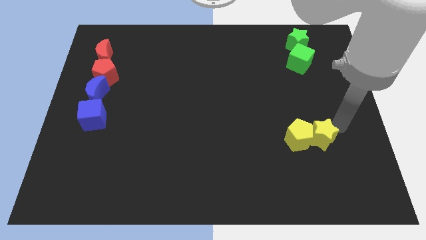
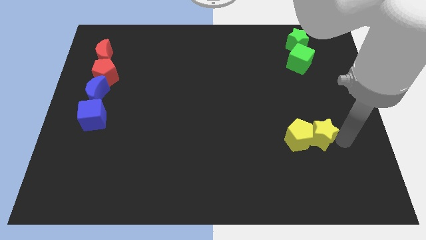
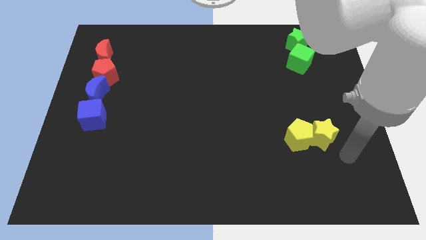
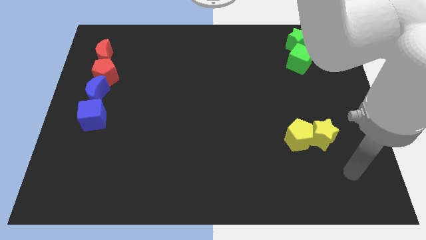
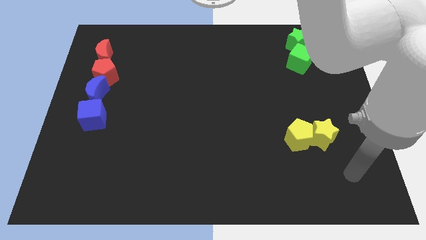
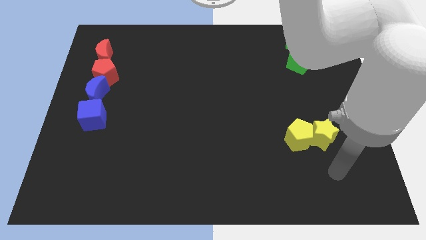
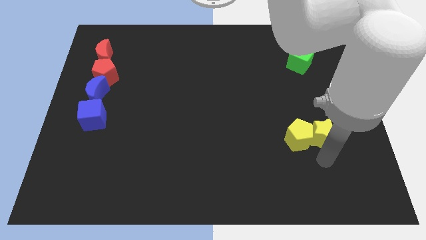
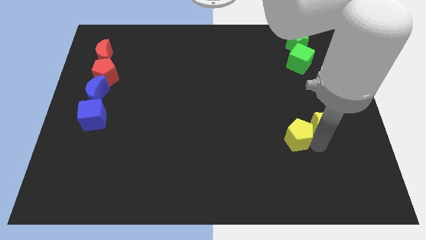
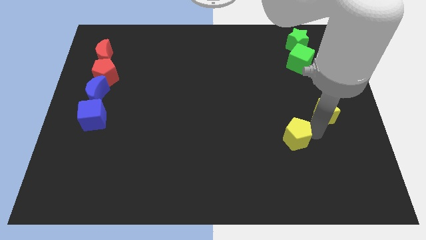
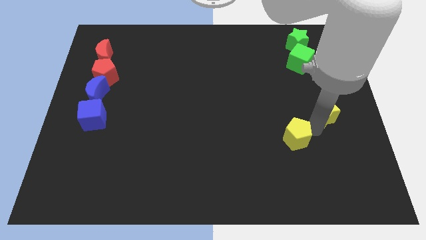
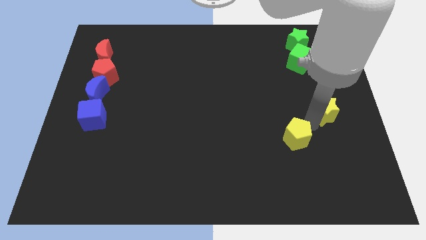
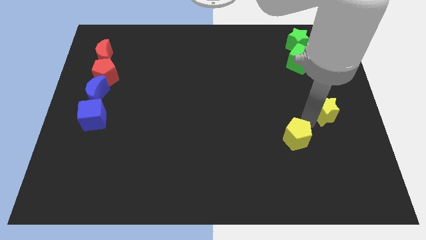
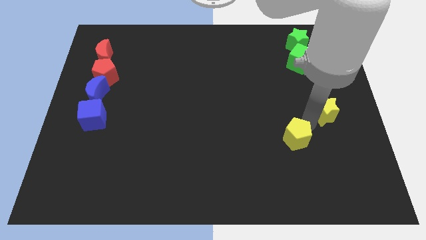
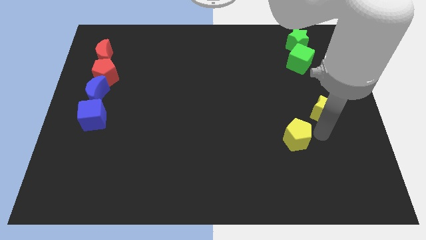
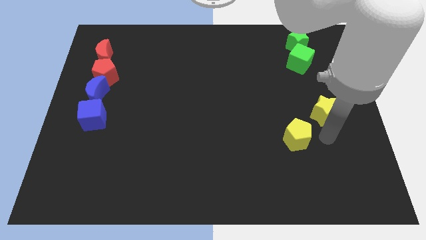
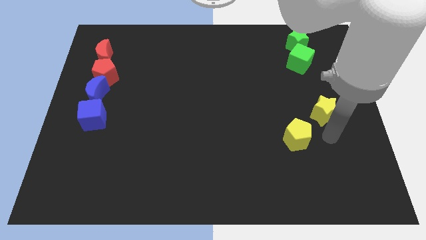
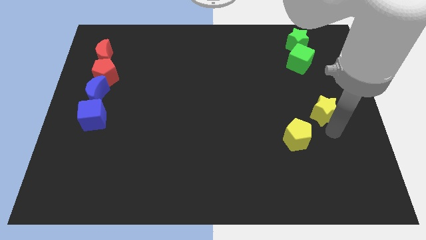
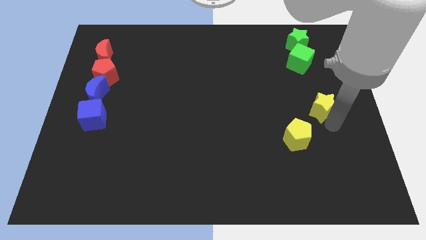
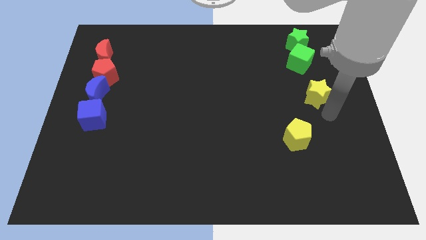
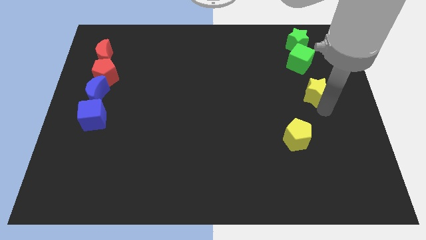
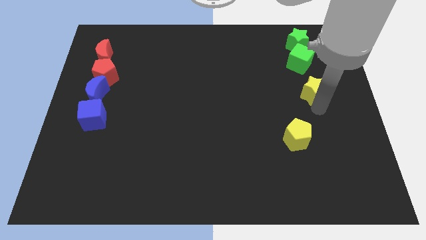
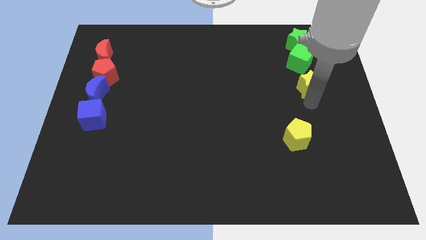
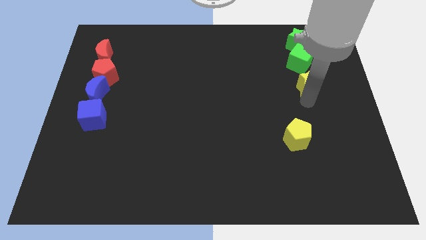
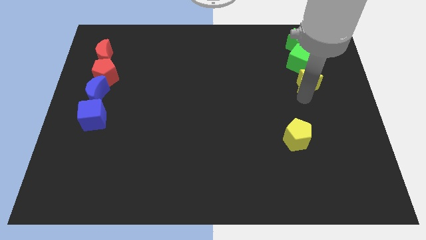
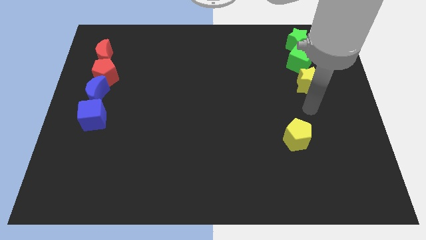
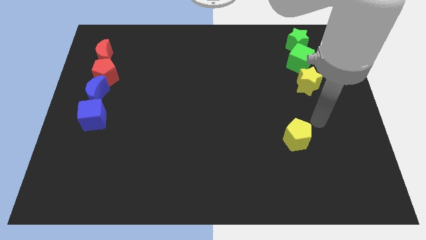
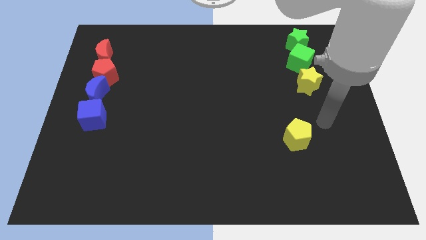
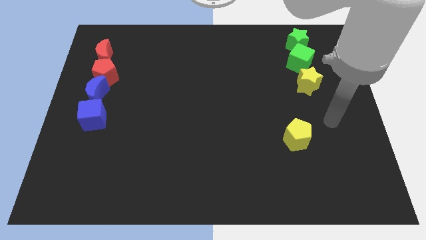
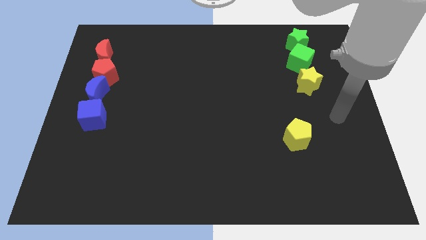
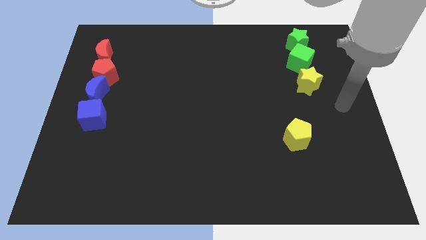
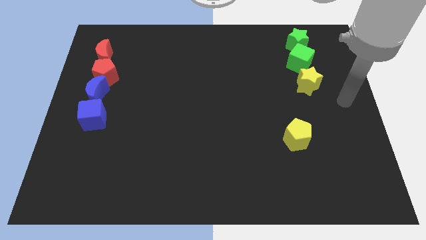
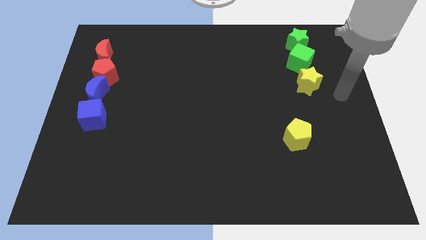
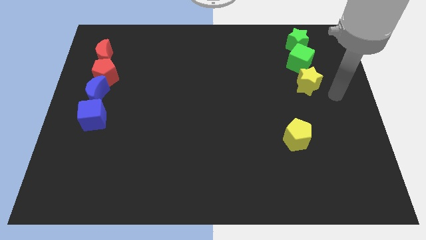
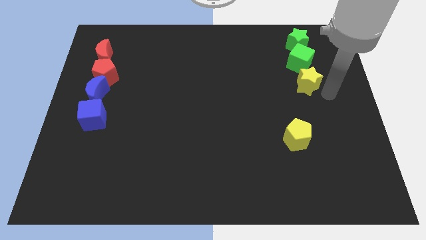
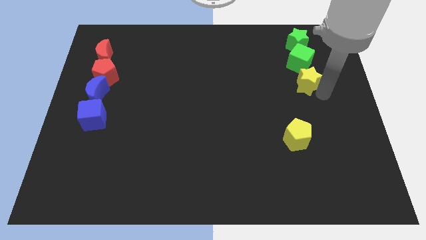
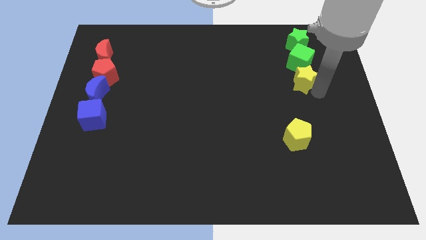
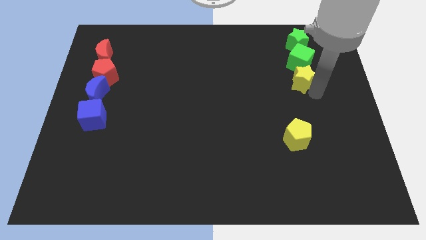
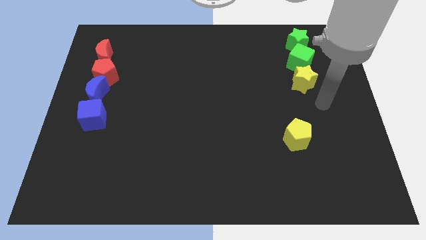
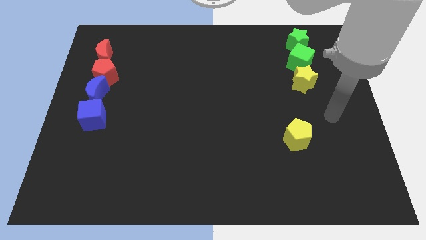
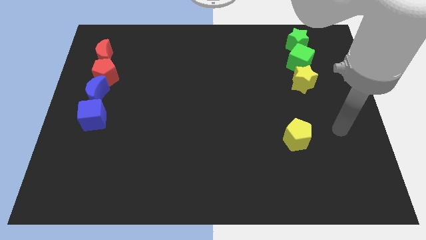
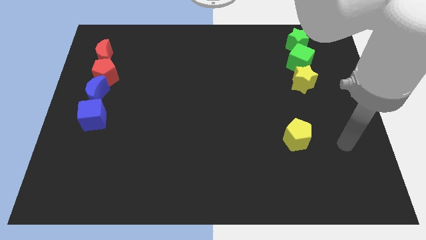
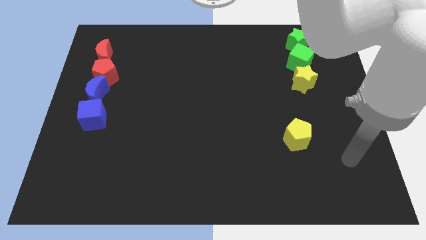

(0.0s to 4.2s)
push the yellow star to the bottom of the green cube

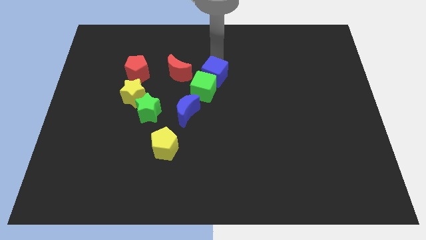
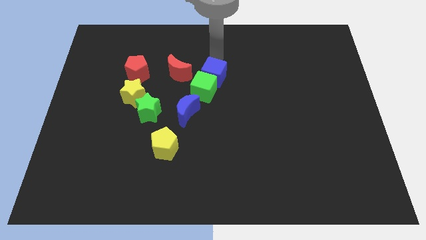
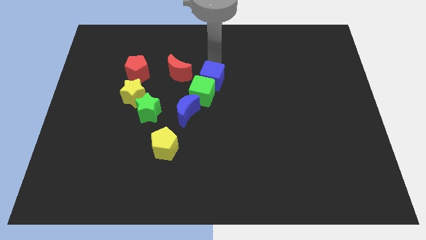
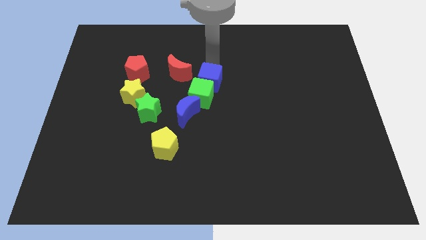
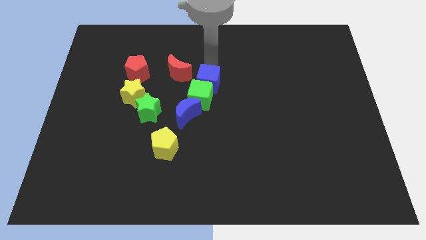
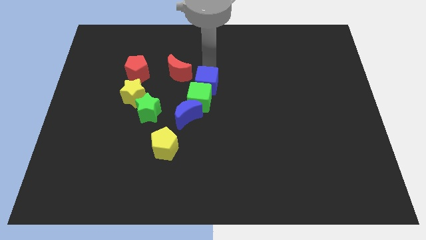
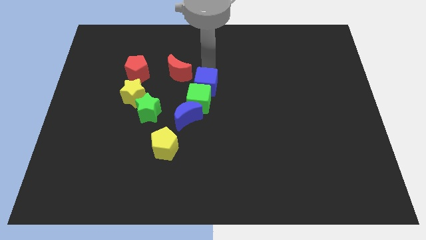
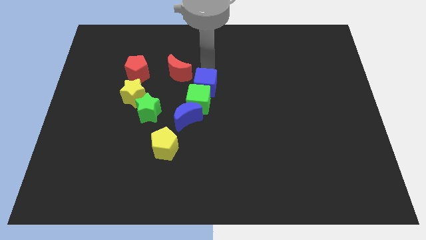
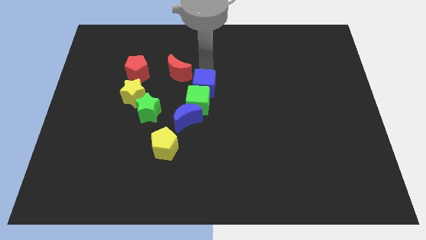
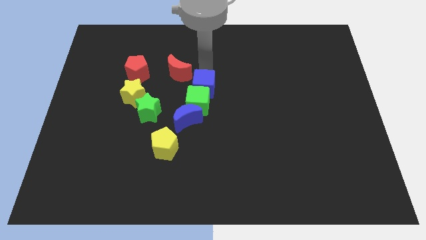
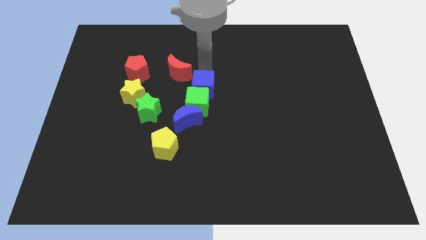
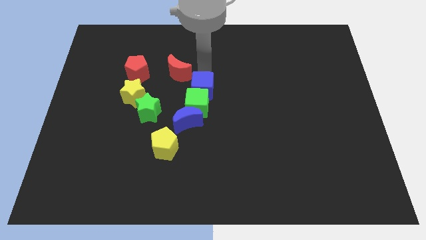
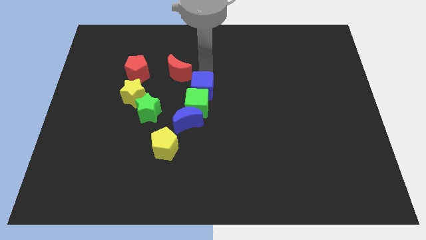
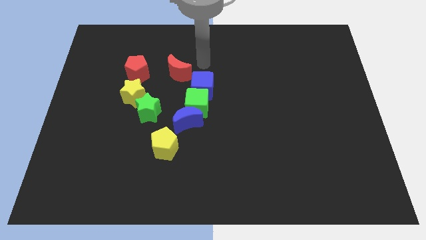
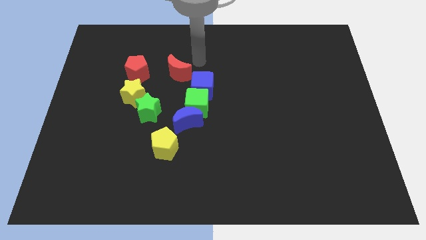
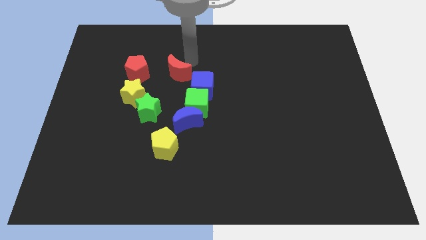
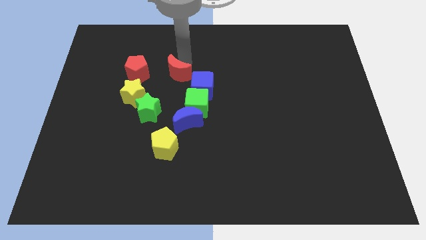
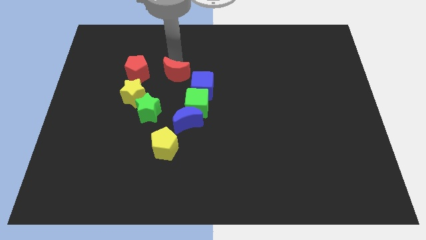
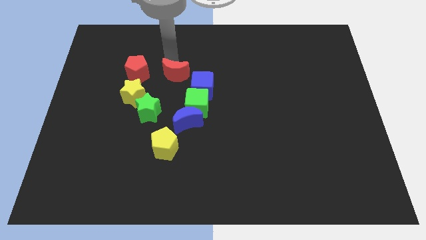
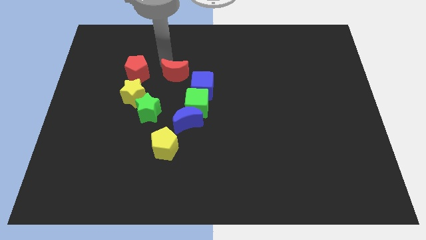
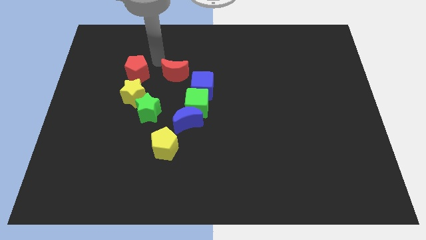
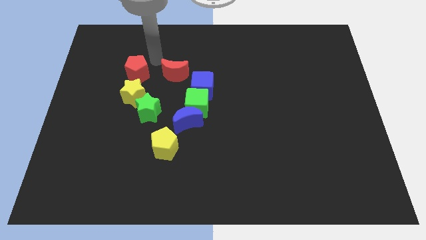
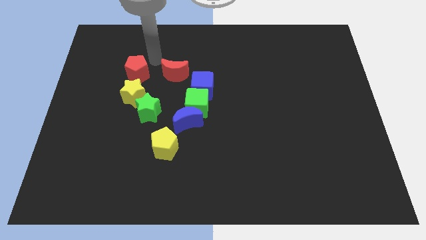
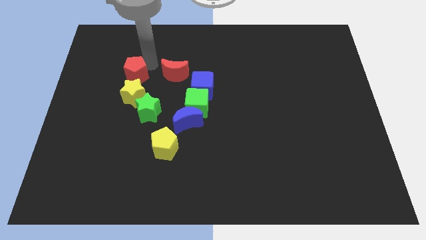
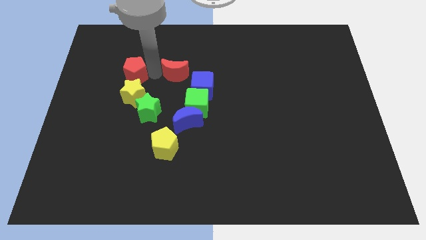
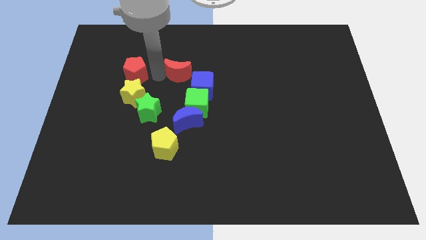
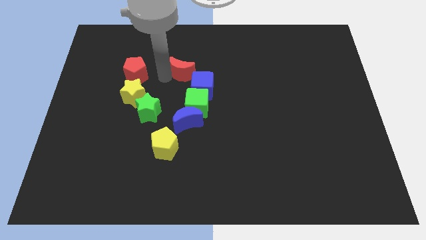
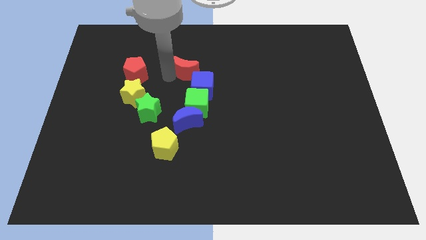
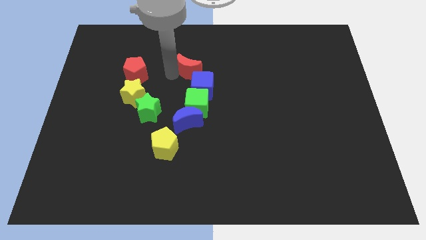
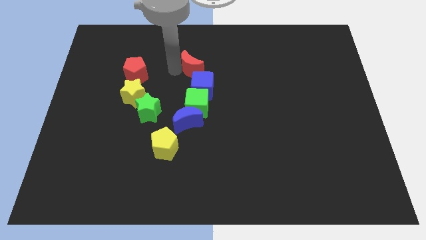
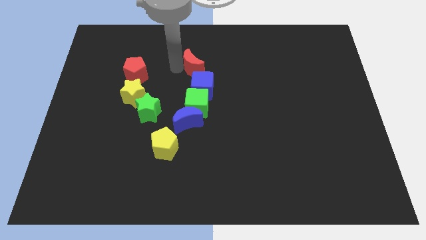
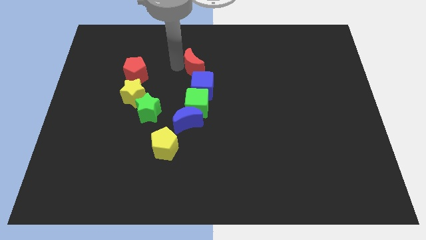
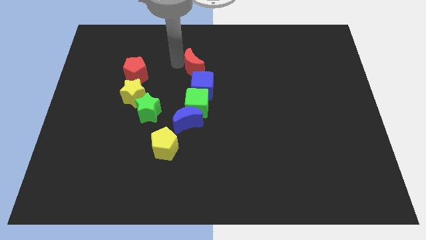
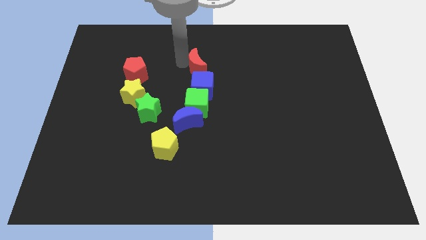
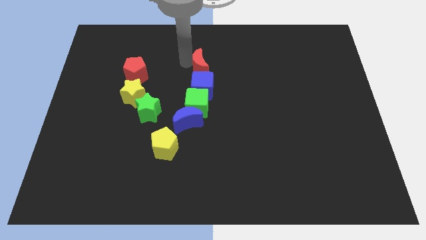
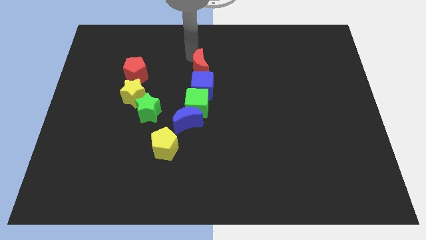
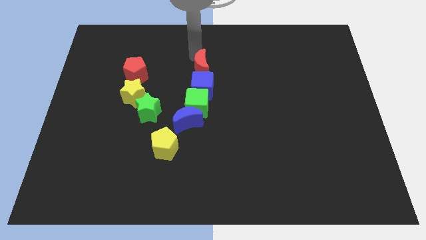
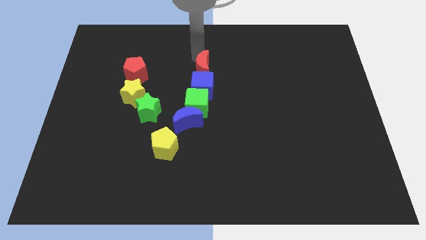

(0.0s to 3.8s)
move red moon above blue cube

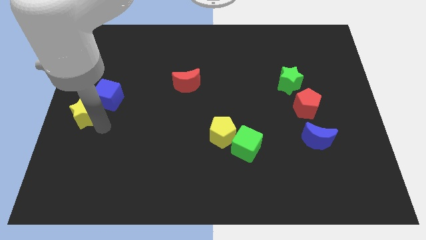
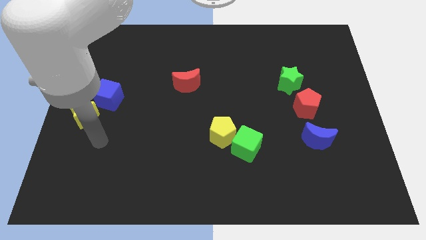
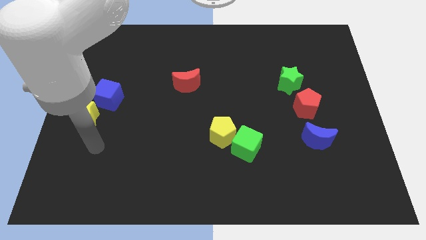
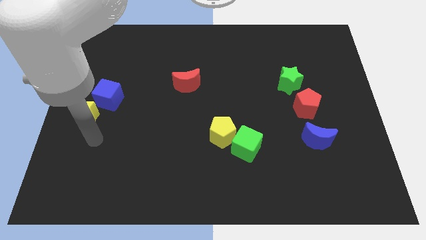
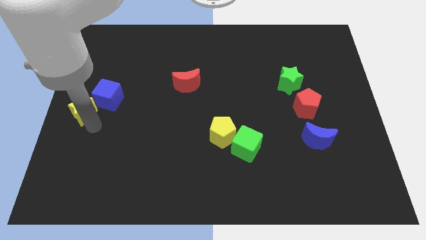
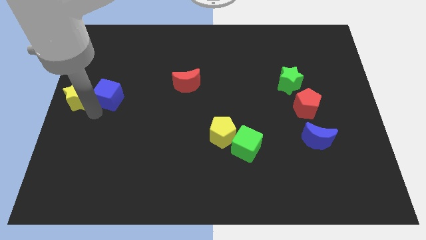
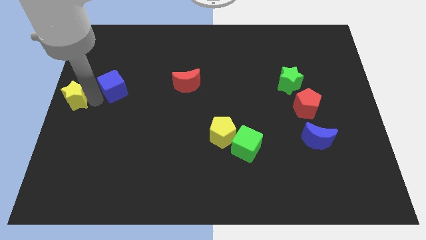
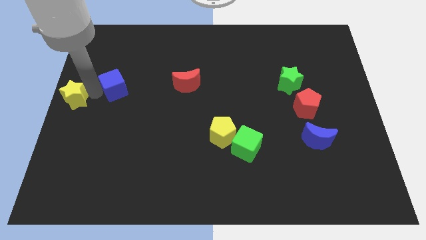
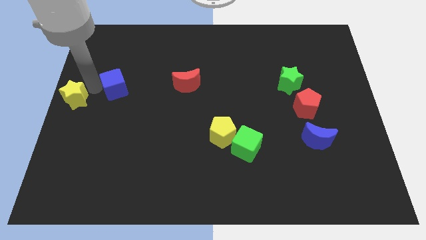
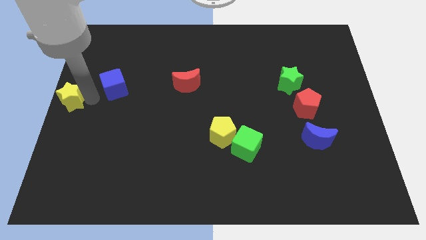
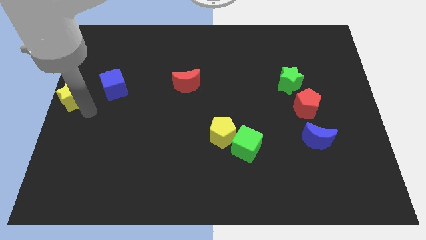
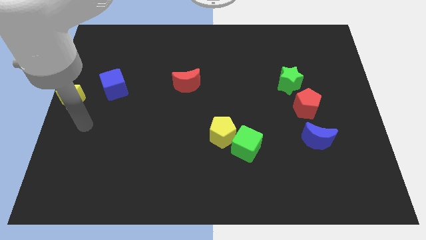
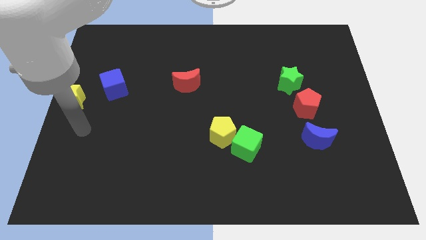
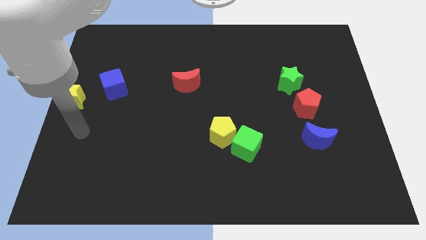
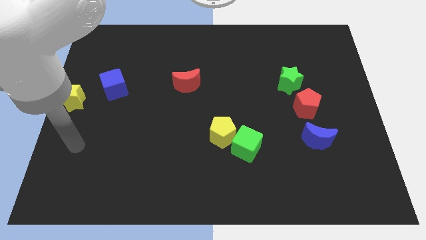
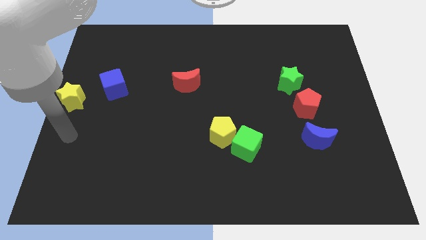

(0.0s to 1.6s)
separate the yellow star and the blue cube
